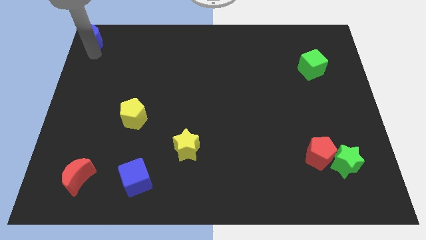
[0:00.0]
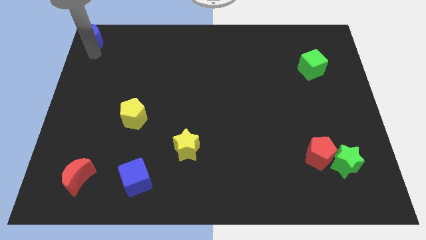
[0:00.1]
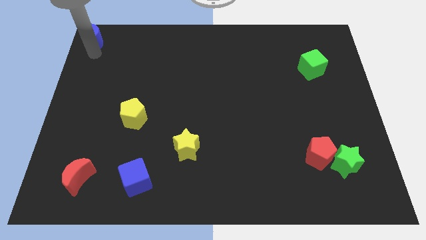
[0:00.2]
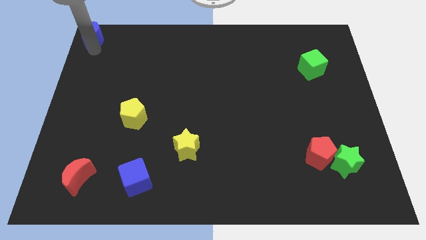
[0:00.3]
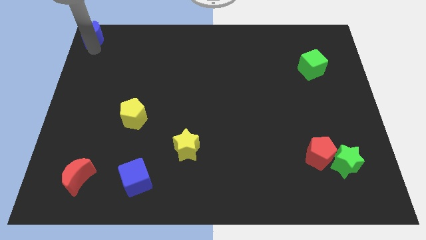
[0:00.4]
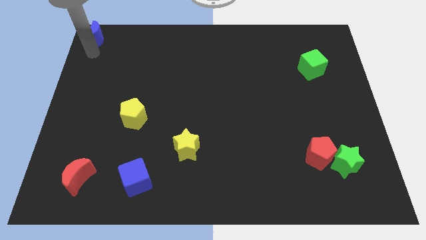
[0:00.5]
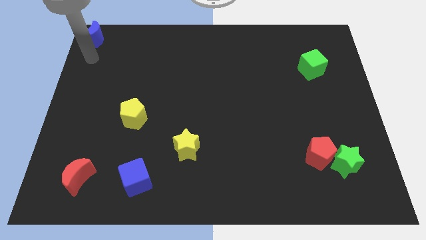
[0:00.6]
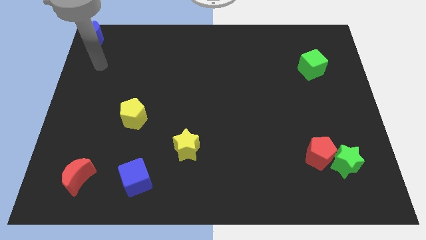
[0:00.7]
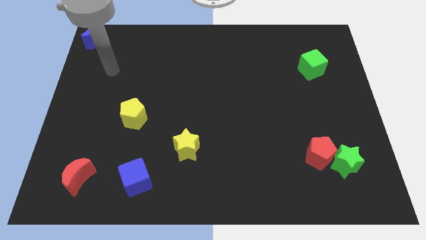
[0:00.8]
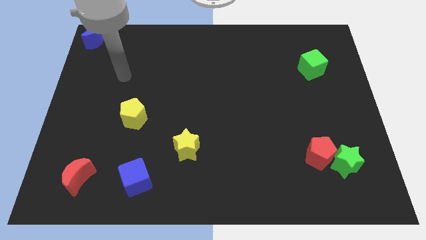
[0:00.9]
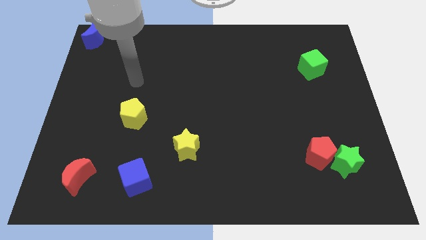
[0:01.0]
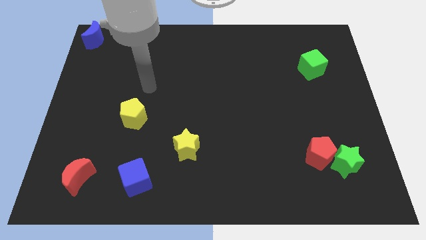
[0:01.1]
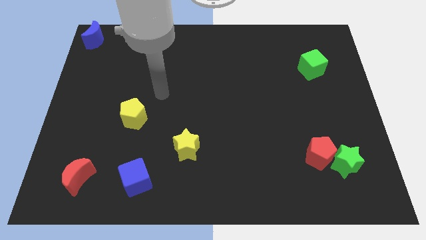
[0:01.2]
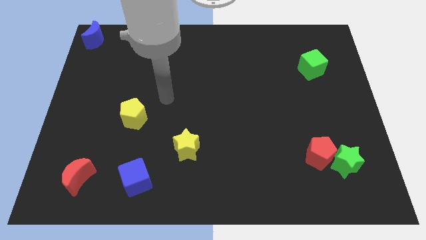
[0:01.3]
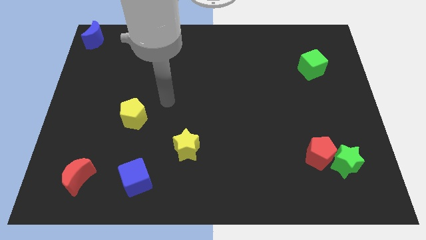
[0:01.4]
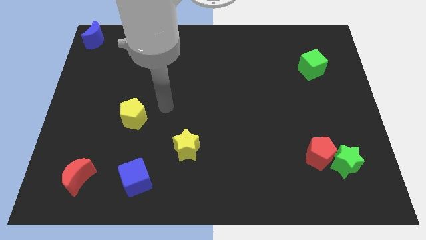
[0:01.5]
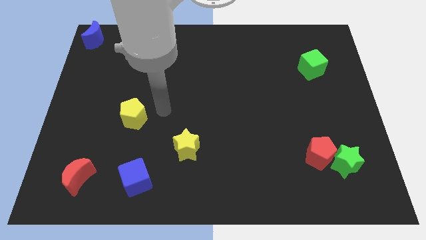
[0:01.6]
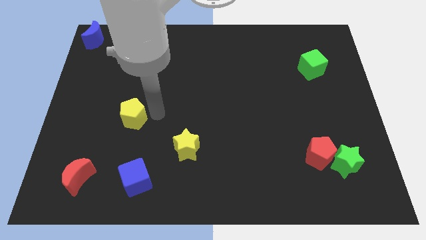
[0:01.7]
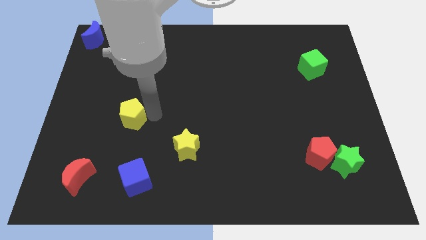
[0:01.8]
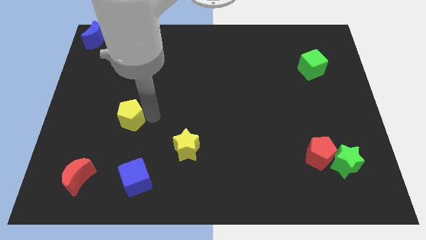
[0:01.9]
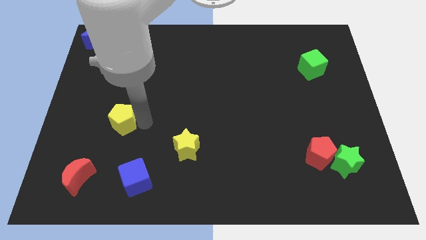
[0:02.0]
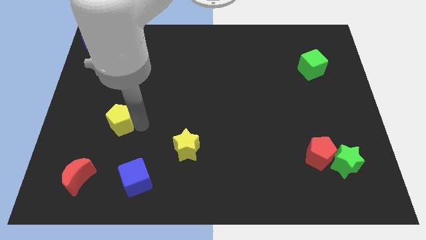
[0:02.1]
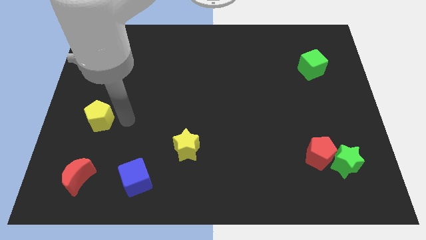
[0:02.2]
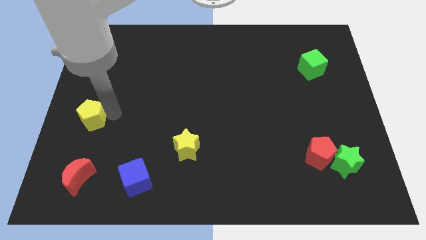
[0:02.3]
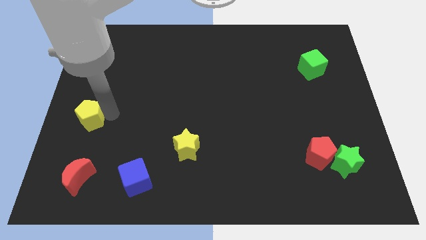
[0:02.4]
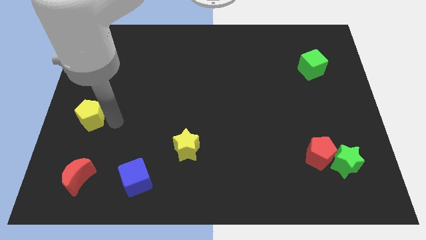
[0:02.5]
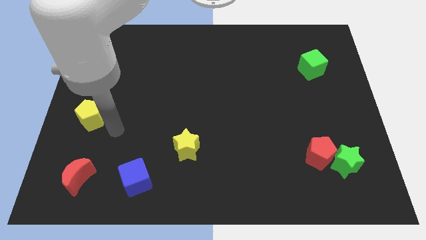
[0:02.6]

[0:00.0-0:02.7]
push the yellow pentagon parallel to the red crescent

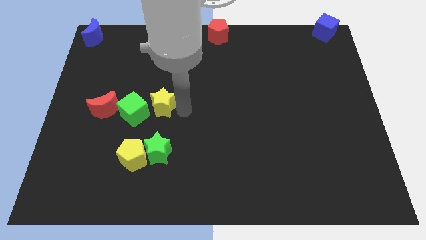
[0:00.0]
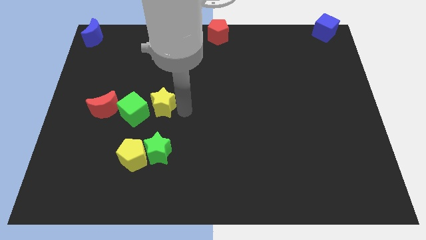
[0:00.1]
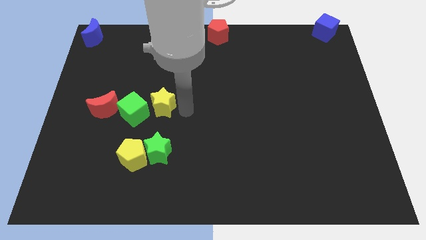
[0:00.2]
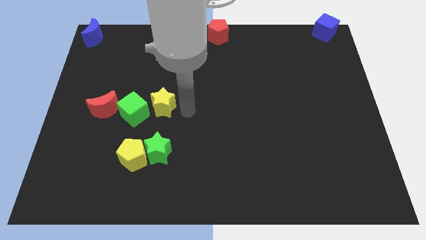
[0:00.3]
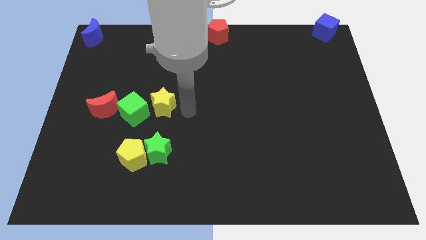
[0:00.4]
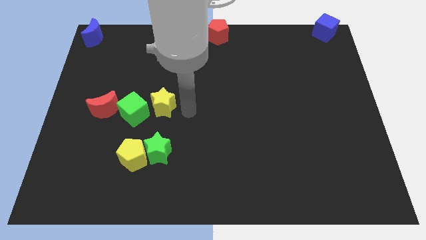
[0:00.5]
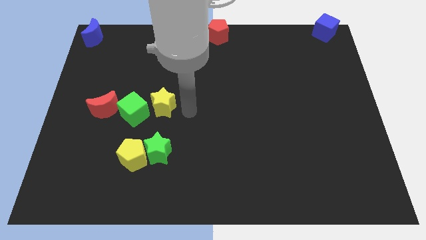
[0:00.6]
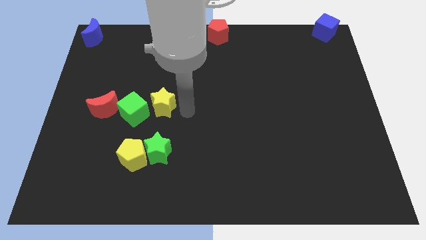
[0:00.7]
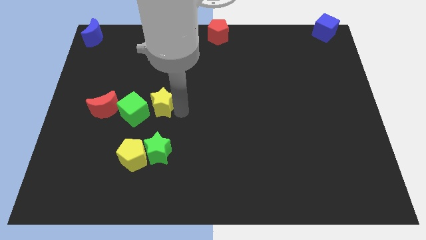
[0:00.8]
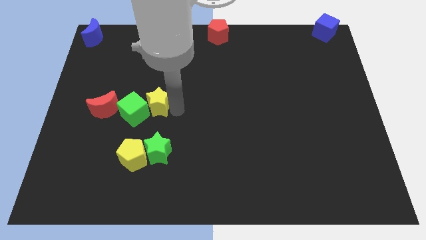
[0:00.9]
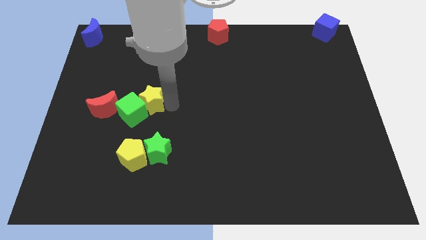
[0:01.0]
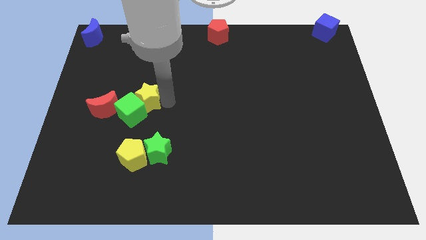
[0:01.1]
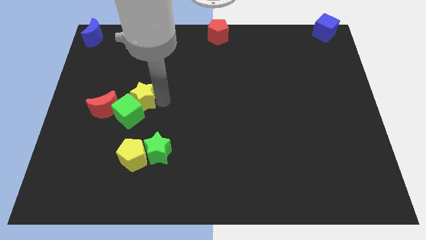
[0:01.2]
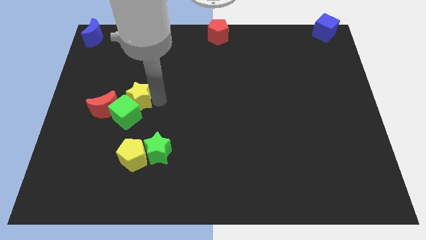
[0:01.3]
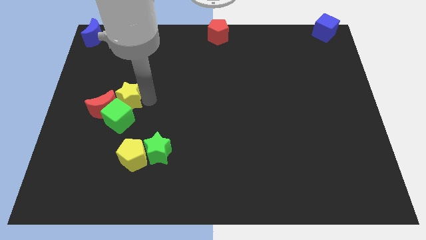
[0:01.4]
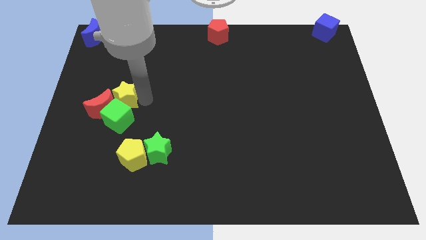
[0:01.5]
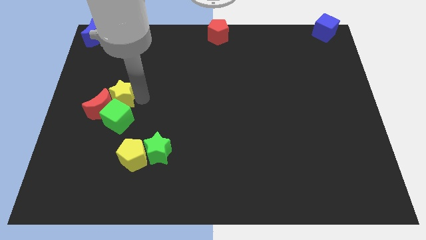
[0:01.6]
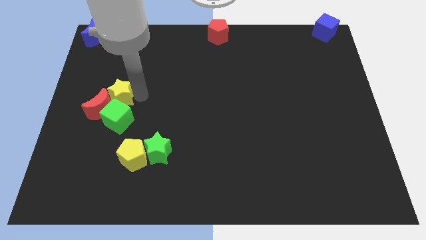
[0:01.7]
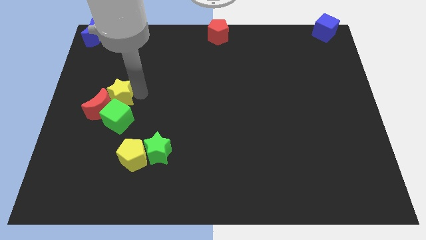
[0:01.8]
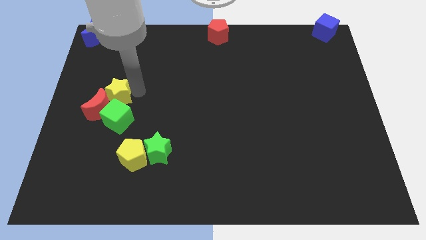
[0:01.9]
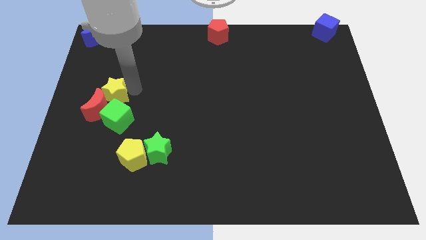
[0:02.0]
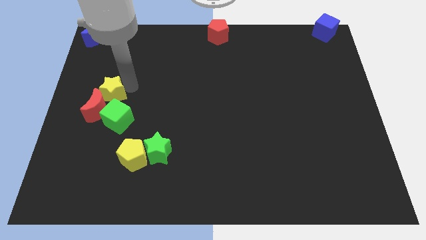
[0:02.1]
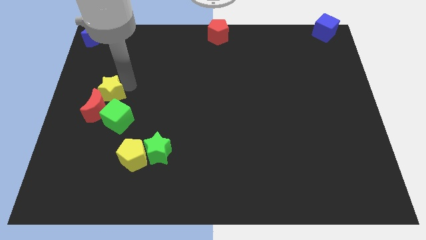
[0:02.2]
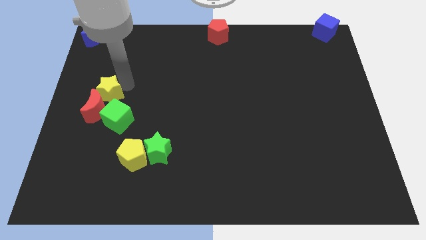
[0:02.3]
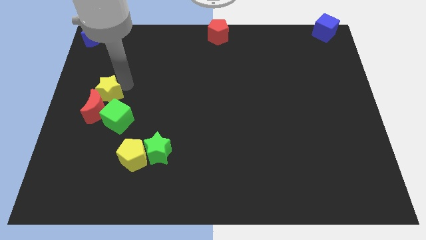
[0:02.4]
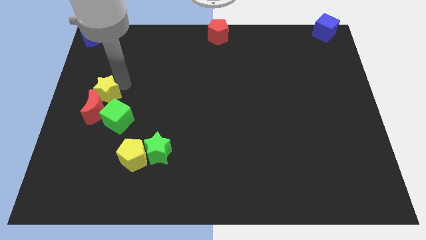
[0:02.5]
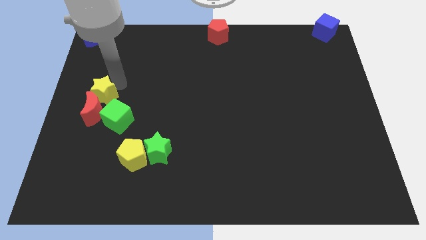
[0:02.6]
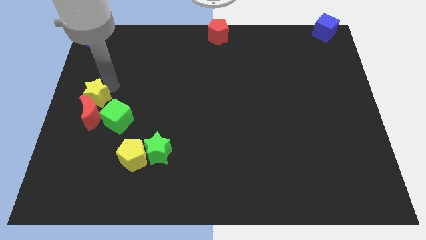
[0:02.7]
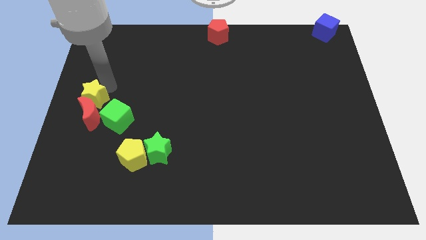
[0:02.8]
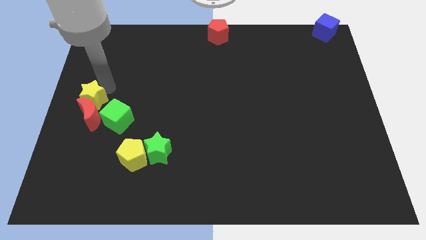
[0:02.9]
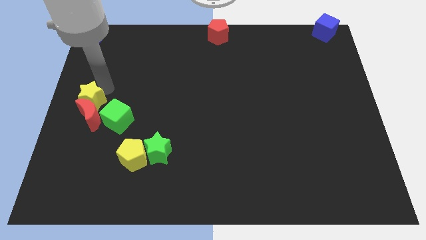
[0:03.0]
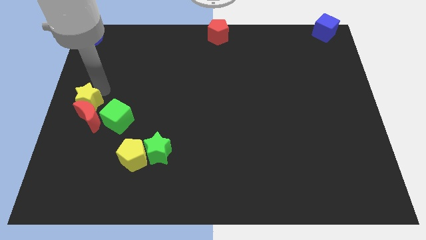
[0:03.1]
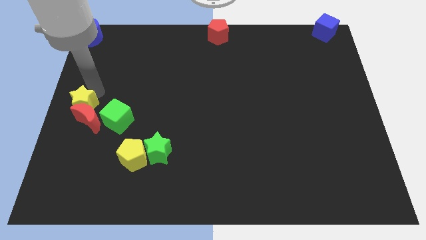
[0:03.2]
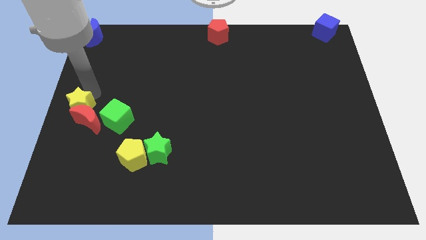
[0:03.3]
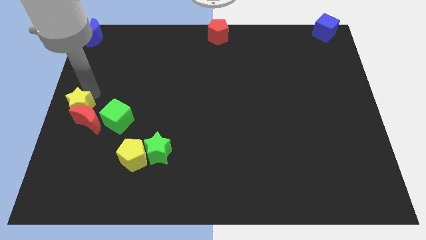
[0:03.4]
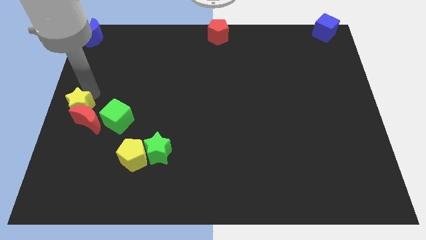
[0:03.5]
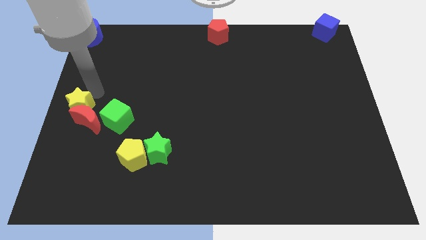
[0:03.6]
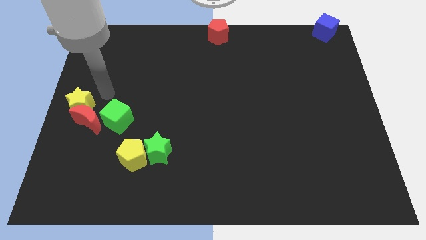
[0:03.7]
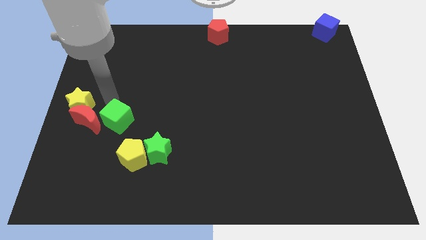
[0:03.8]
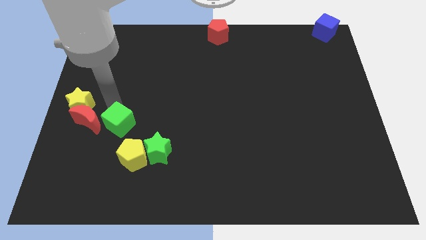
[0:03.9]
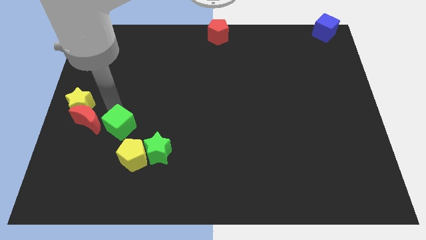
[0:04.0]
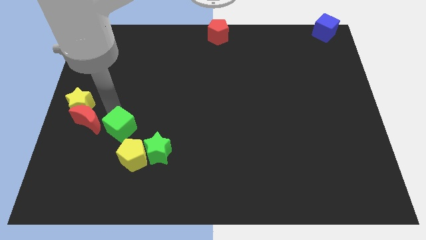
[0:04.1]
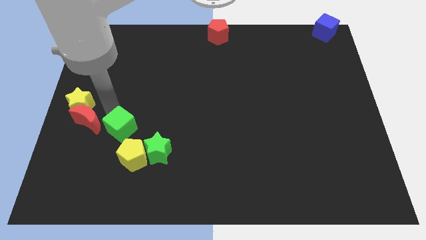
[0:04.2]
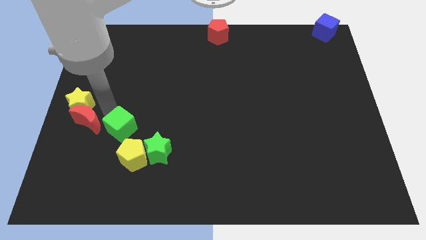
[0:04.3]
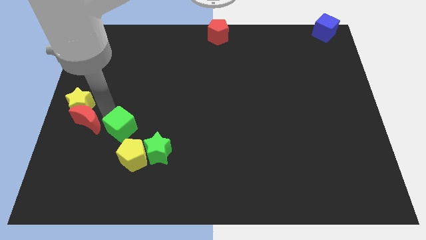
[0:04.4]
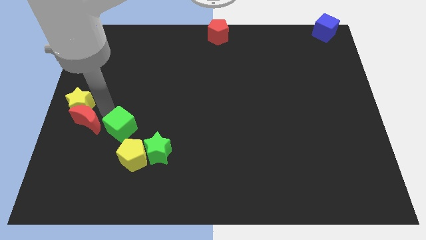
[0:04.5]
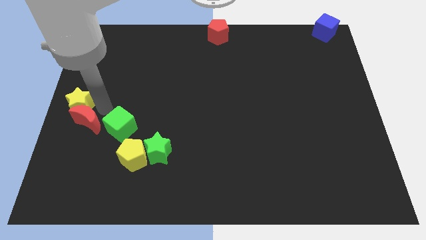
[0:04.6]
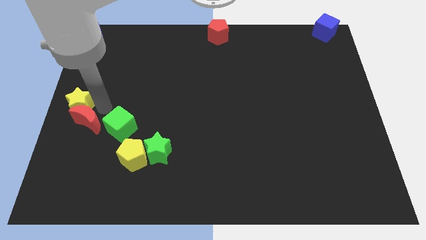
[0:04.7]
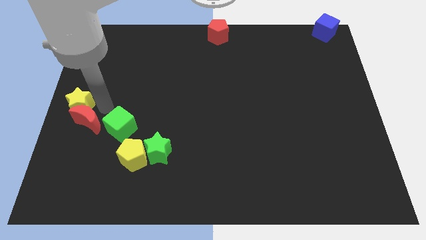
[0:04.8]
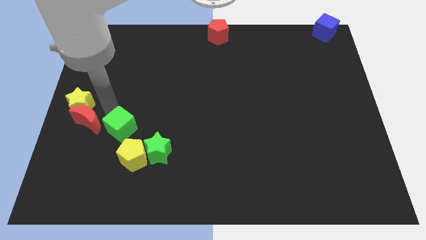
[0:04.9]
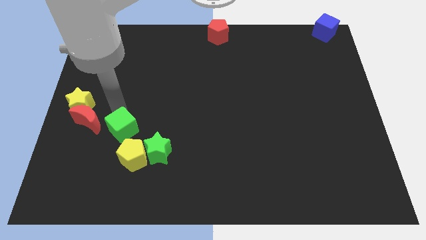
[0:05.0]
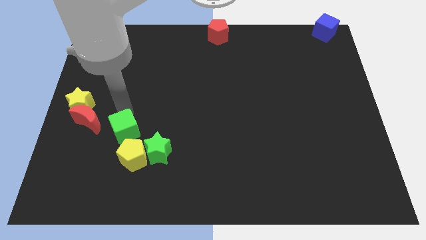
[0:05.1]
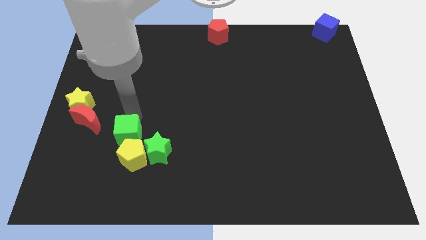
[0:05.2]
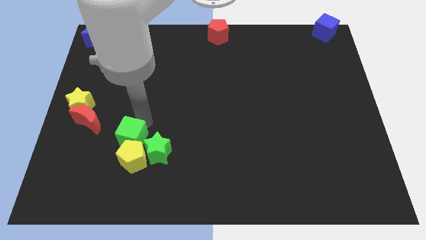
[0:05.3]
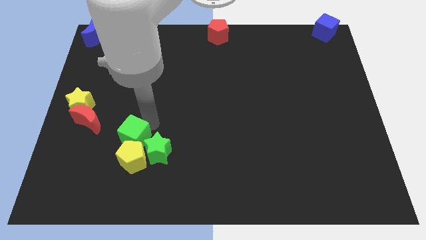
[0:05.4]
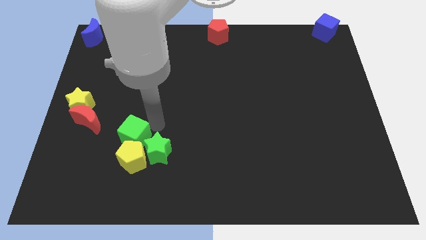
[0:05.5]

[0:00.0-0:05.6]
push the yellow pentagon and the green star with the green block

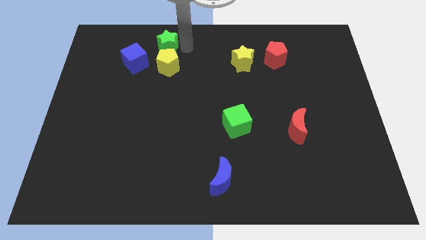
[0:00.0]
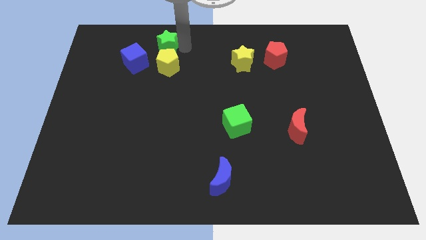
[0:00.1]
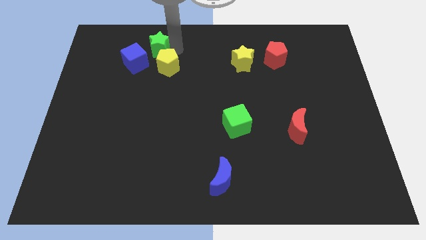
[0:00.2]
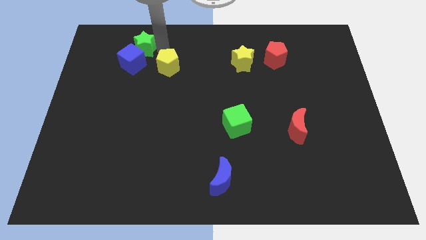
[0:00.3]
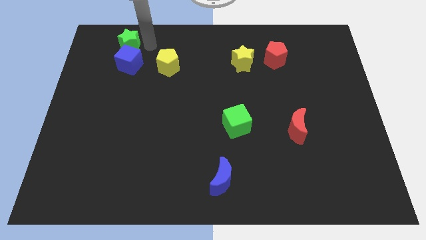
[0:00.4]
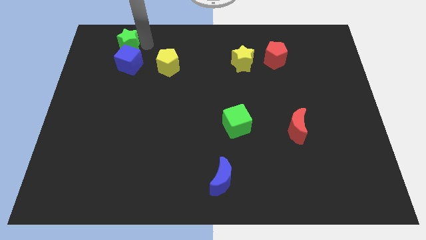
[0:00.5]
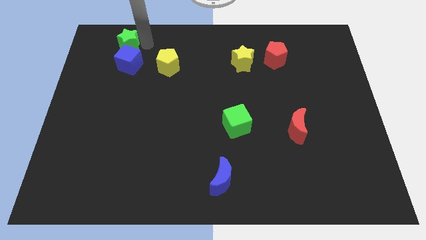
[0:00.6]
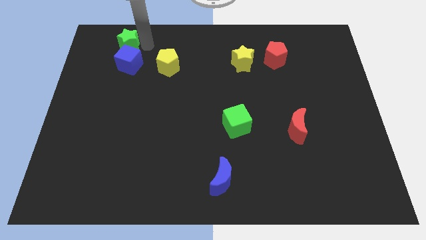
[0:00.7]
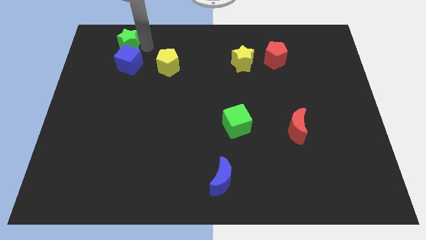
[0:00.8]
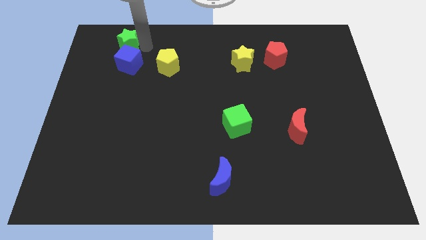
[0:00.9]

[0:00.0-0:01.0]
push the green star to the top side of the blue cube
